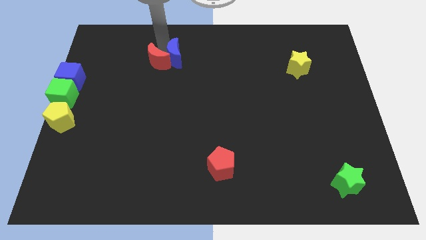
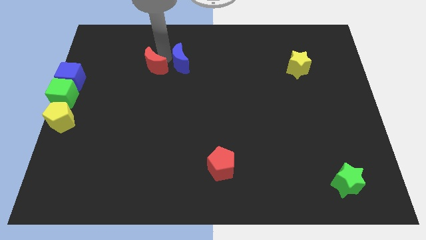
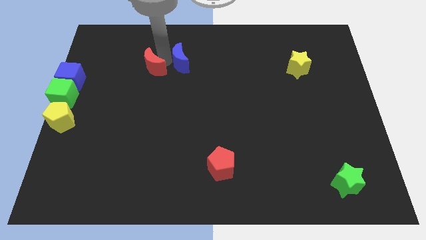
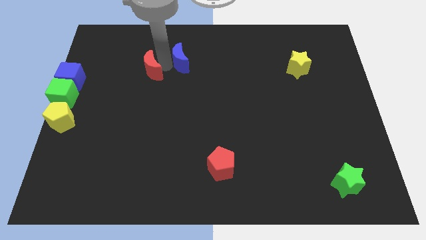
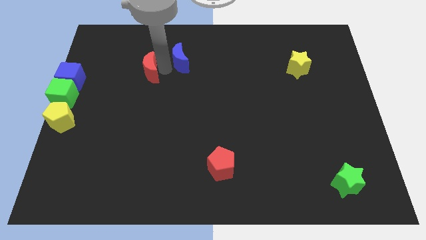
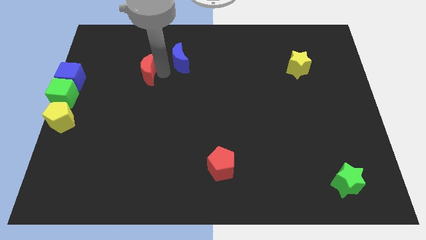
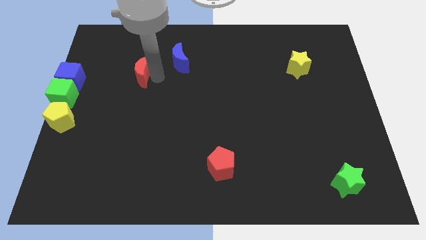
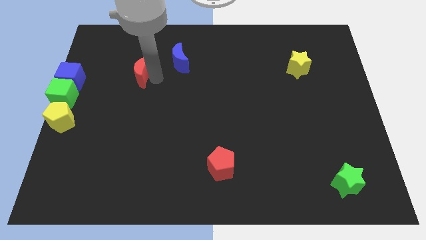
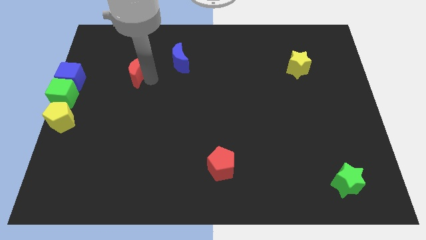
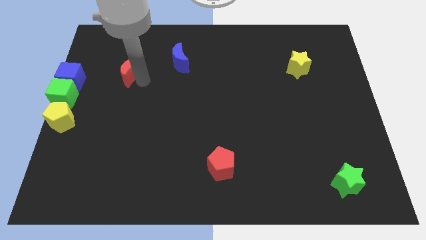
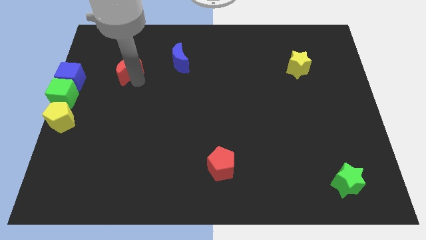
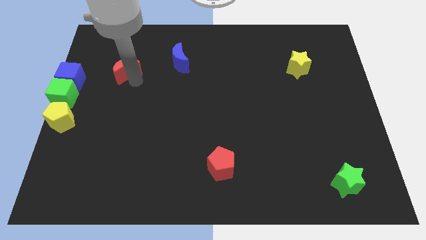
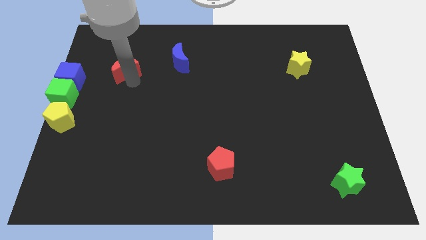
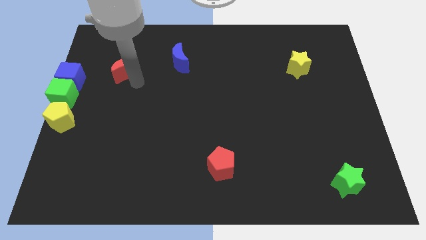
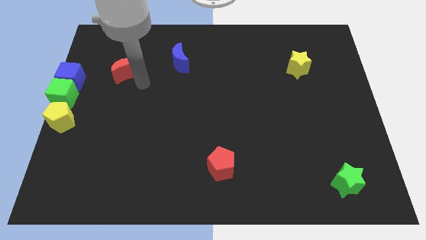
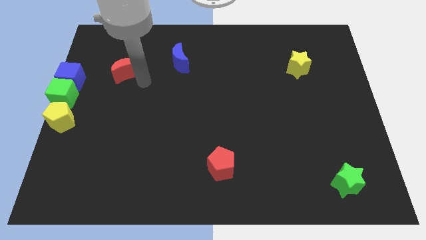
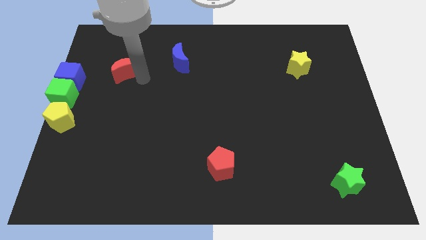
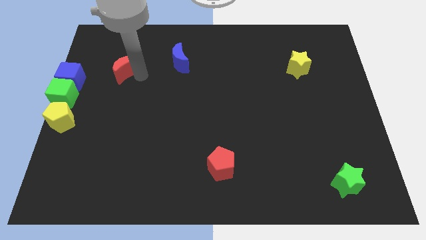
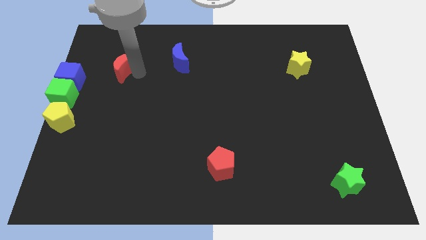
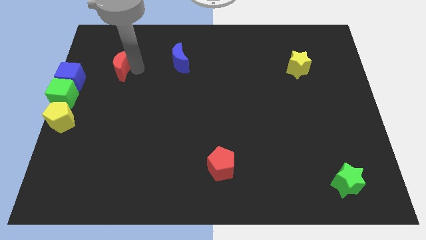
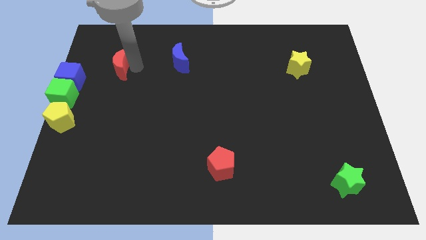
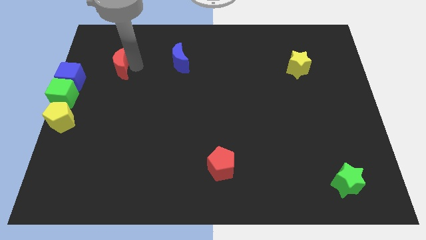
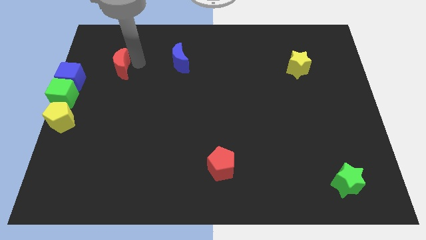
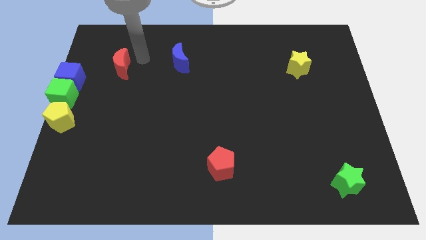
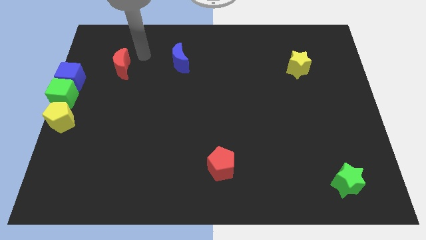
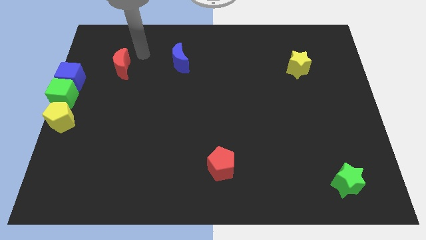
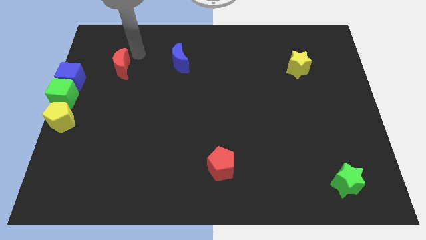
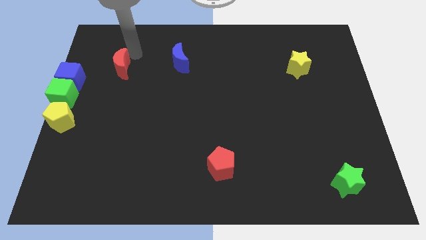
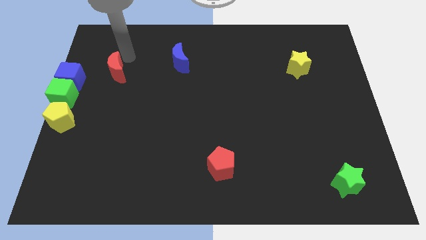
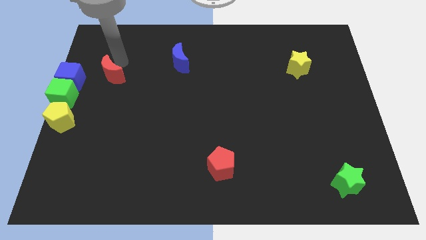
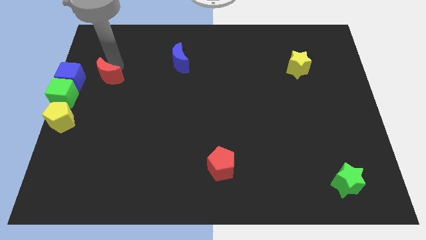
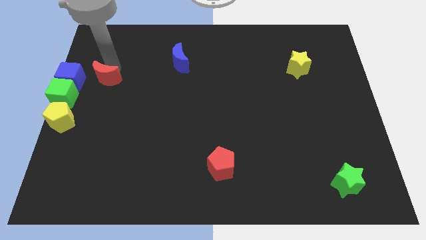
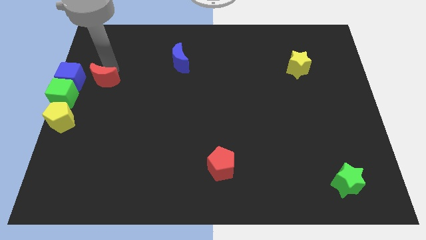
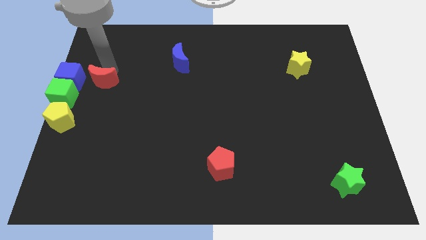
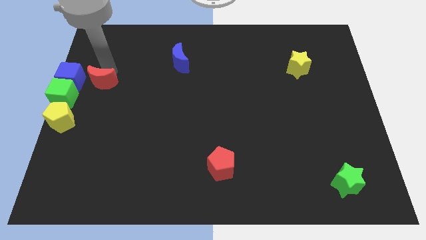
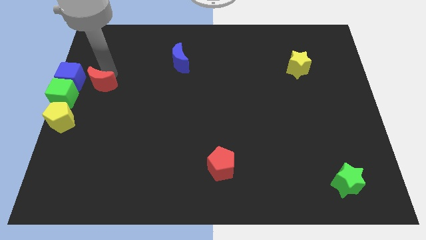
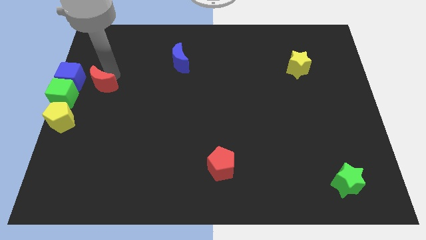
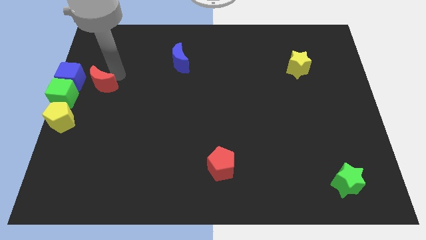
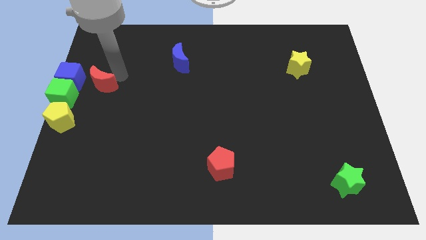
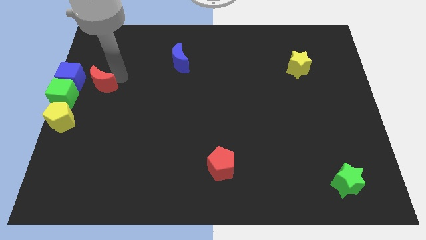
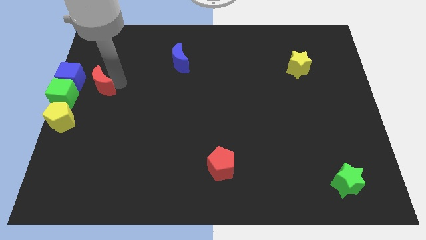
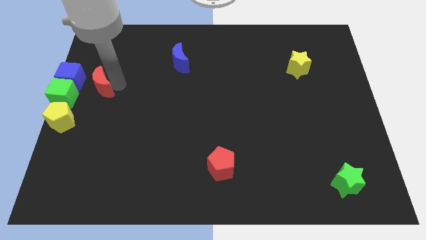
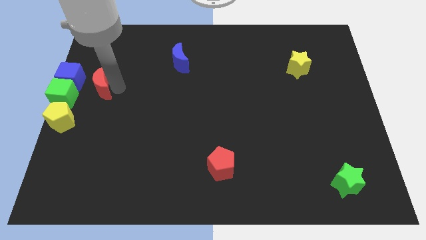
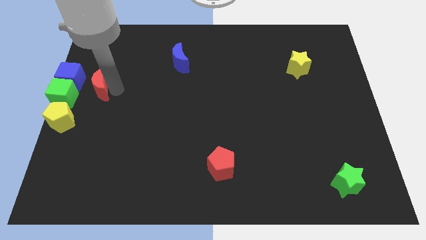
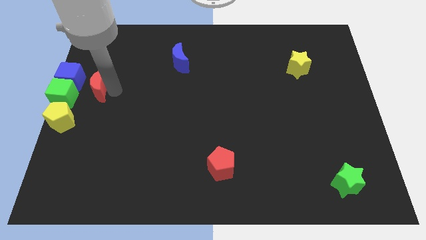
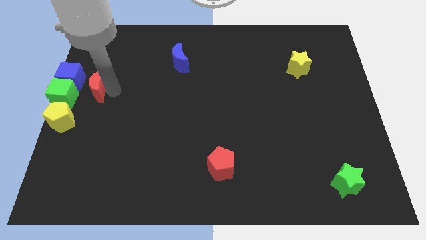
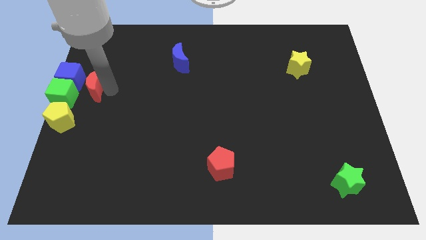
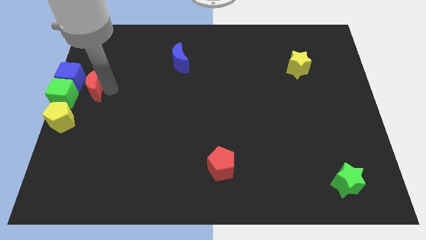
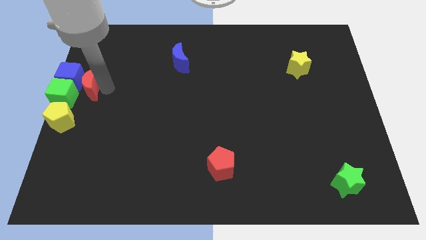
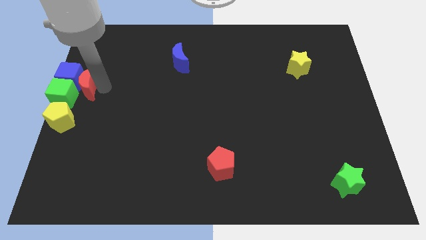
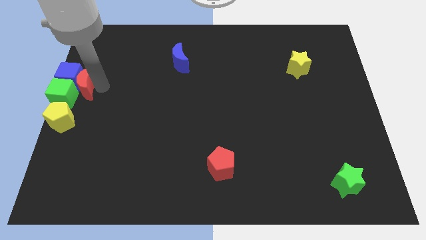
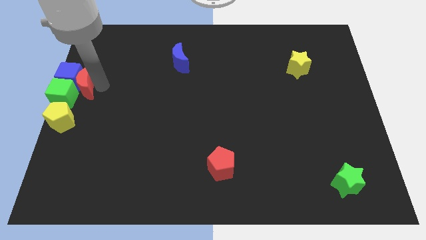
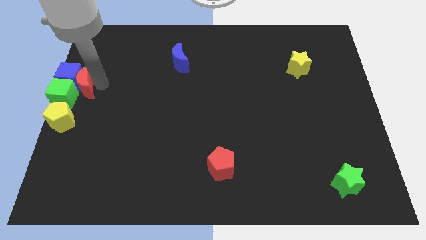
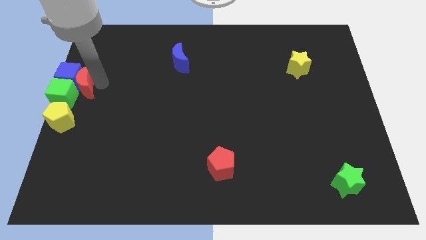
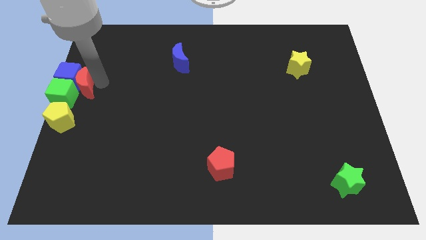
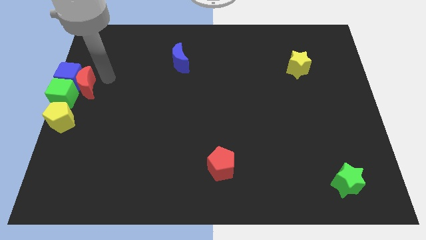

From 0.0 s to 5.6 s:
move the red moon to the right of the blue cube

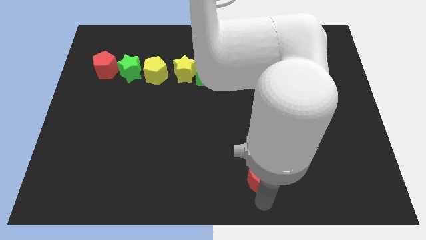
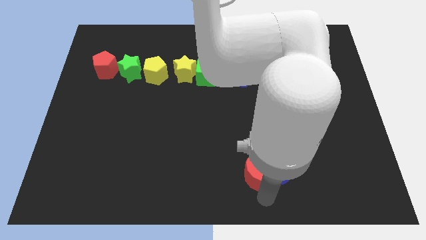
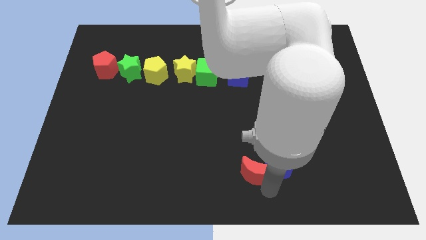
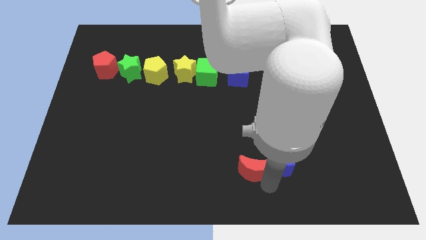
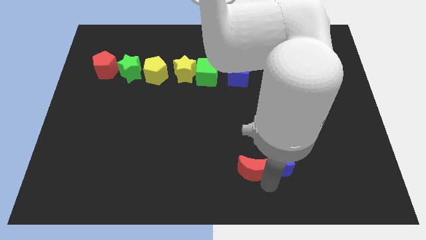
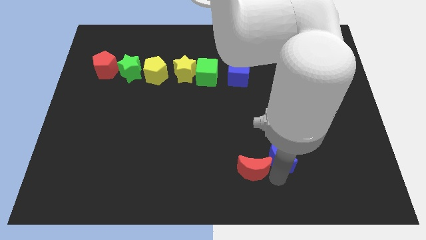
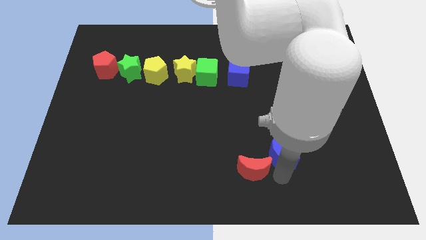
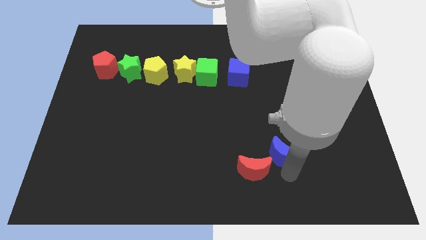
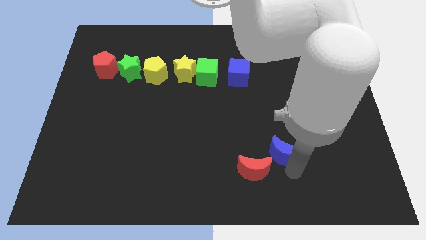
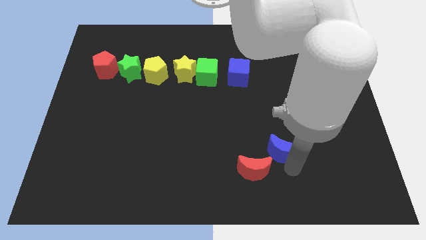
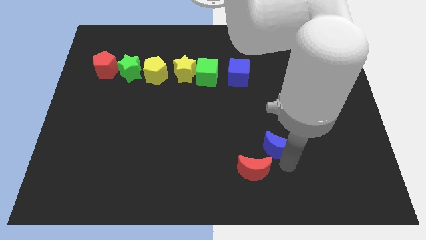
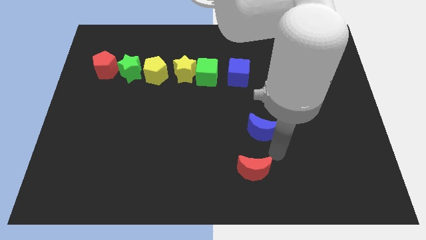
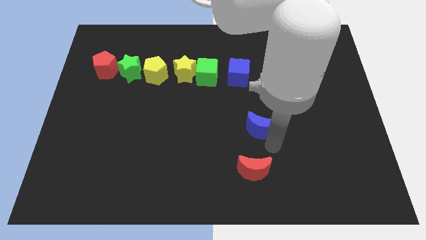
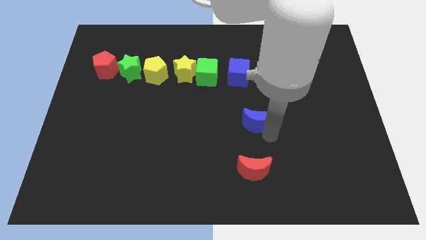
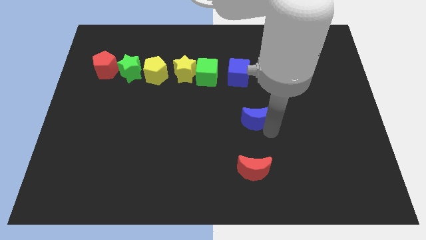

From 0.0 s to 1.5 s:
separate the blue and red crescents

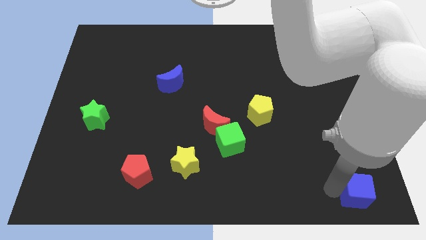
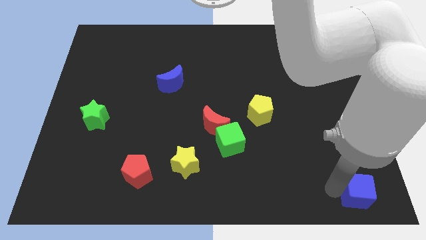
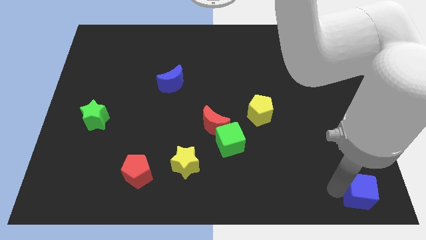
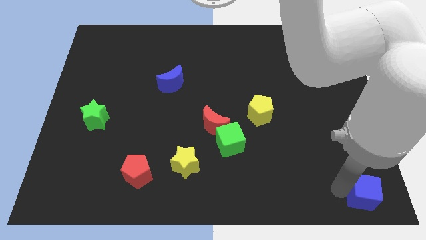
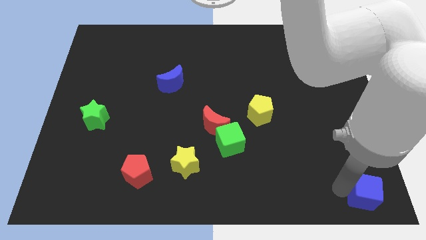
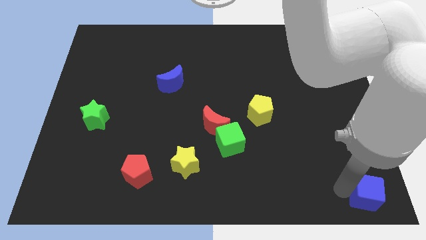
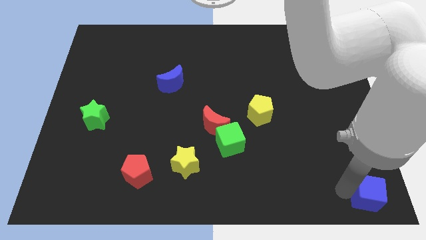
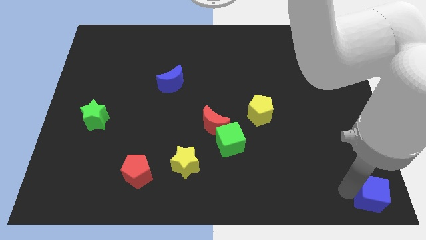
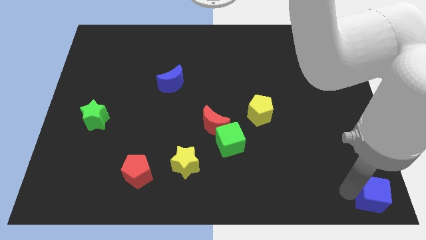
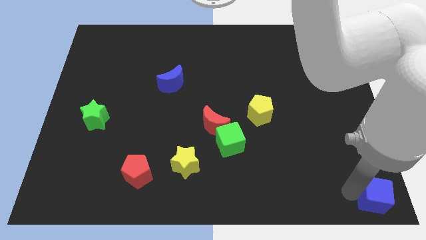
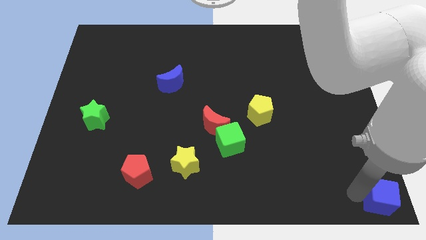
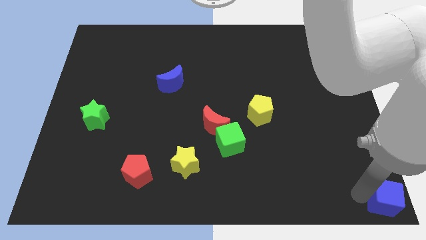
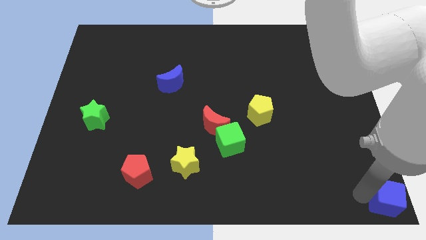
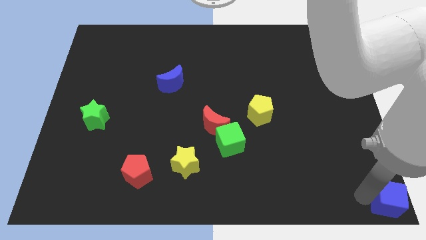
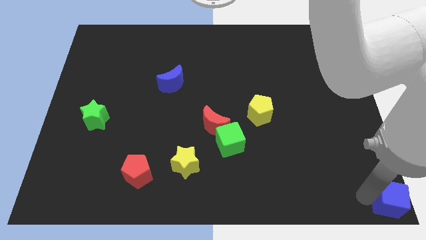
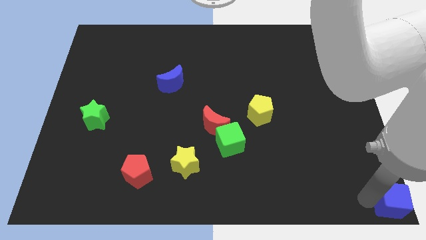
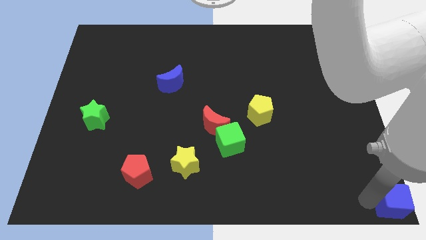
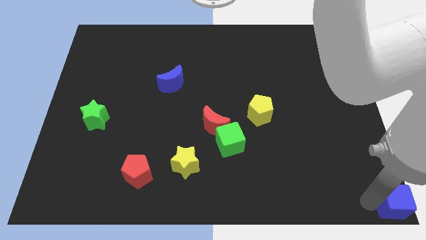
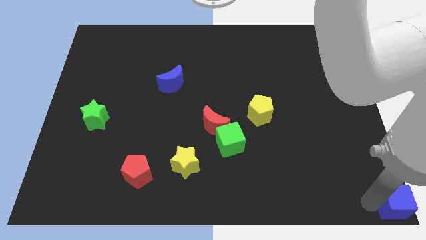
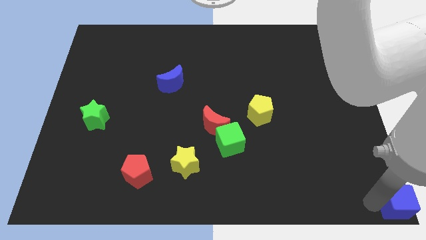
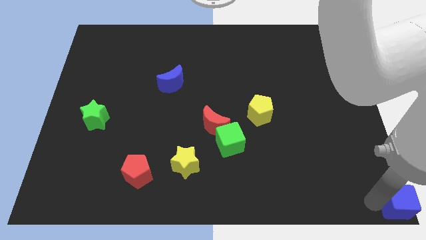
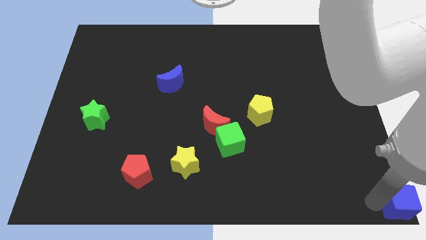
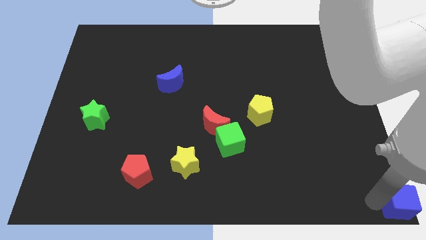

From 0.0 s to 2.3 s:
place the blue cube to the bottom corner side
